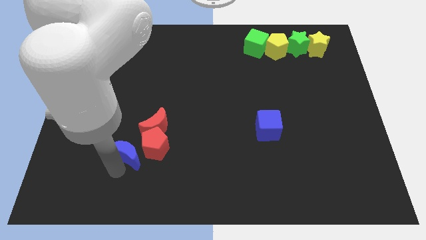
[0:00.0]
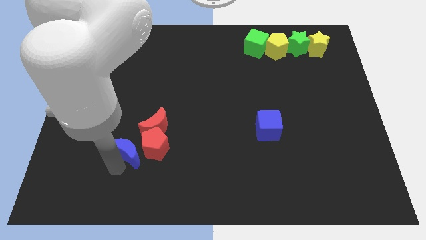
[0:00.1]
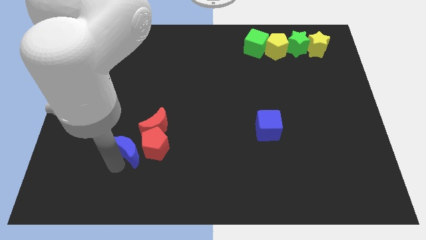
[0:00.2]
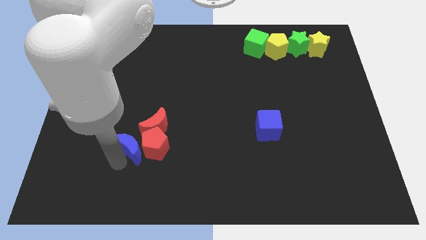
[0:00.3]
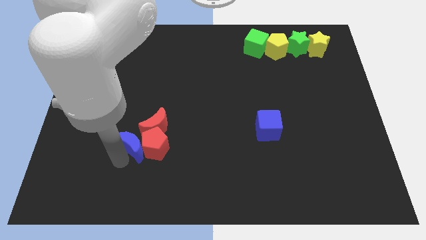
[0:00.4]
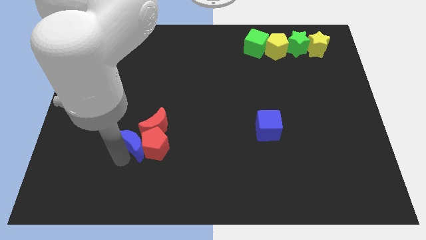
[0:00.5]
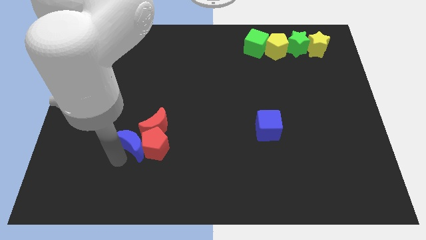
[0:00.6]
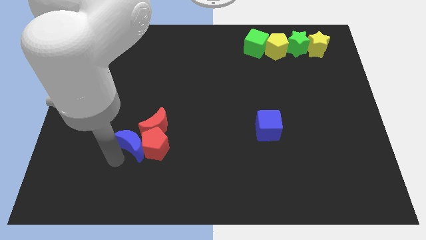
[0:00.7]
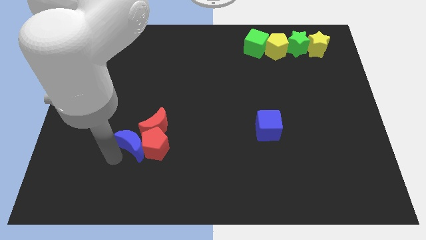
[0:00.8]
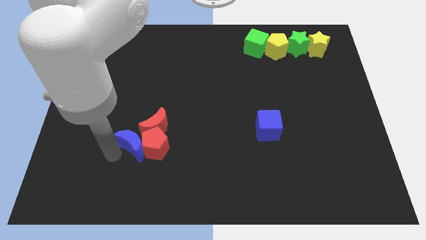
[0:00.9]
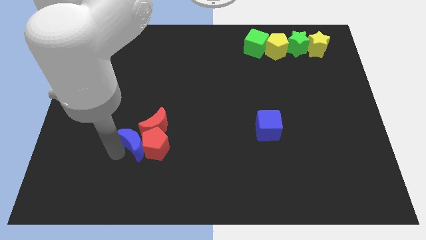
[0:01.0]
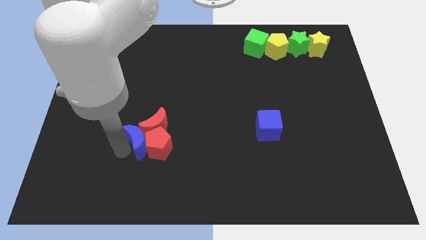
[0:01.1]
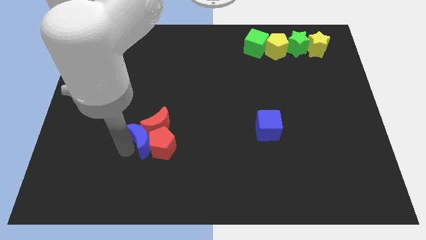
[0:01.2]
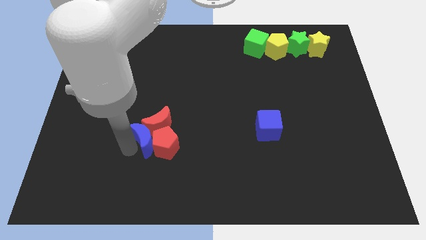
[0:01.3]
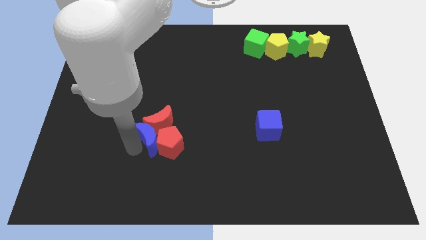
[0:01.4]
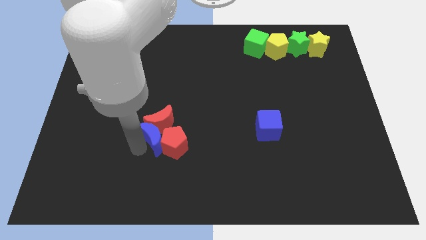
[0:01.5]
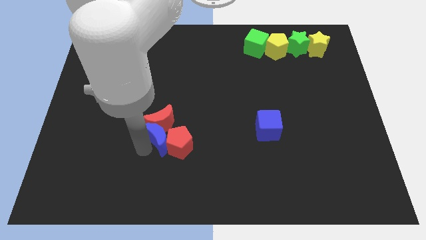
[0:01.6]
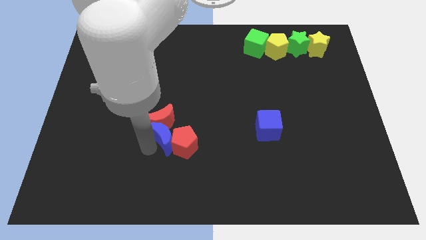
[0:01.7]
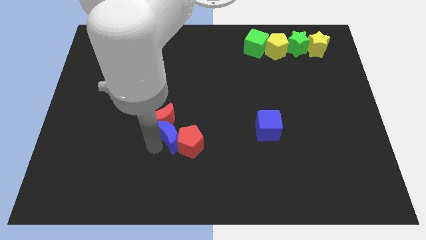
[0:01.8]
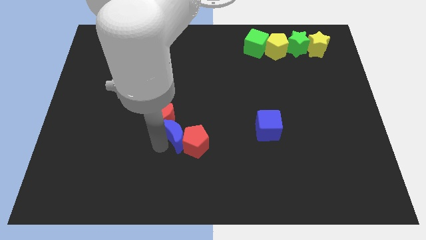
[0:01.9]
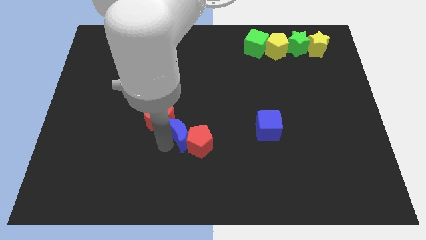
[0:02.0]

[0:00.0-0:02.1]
place blue moon to the bottom of red moon

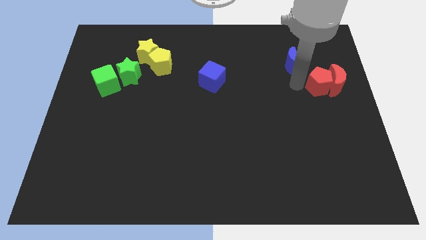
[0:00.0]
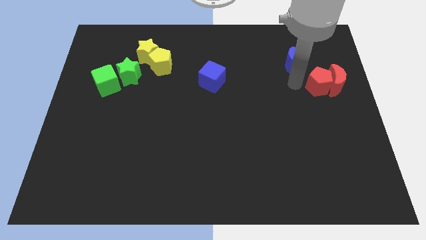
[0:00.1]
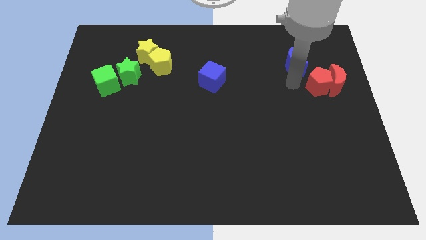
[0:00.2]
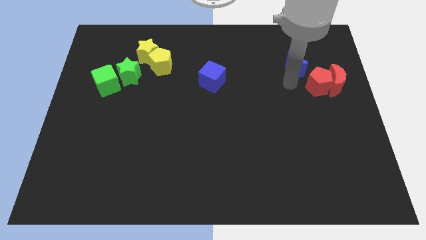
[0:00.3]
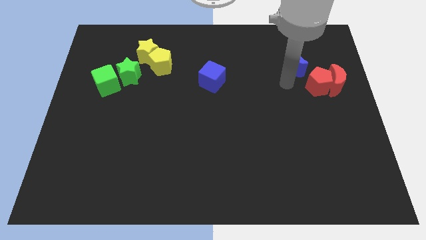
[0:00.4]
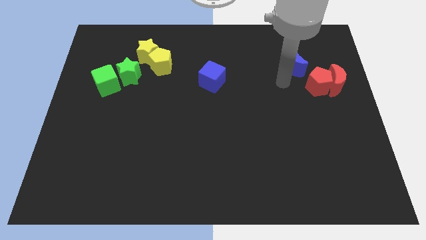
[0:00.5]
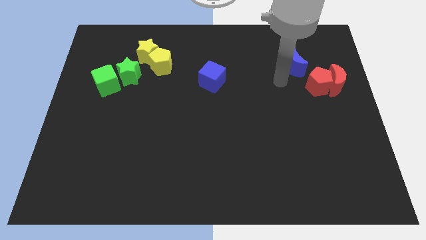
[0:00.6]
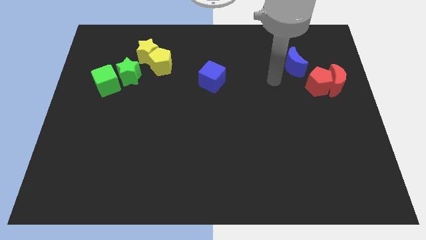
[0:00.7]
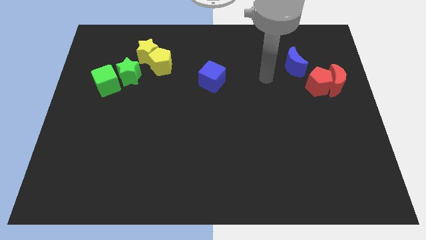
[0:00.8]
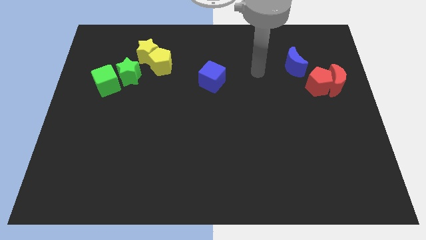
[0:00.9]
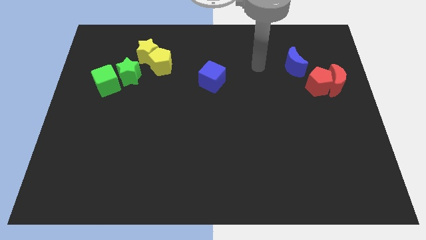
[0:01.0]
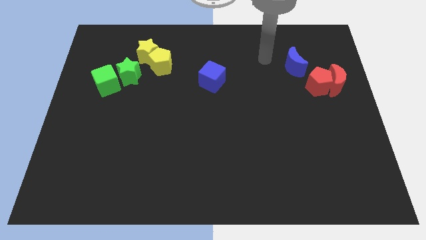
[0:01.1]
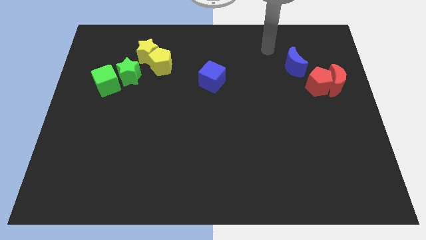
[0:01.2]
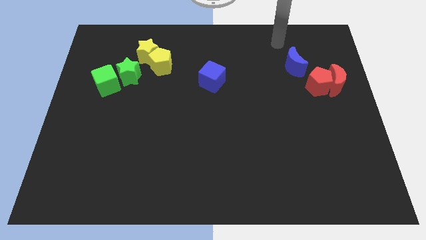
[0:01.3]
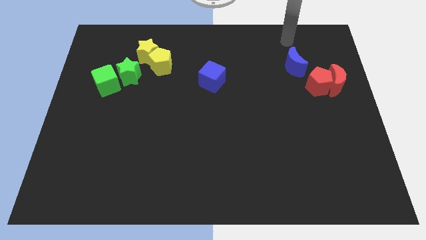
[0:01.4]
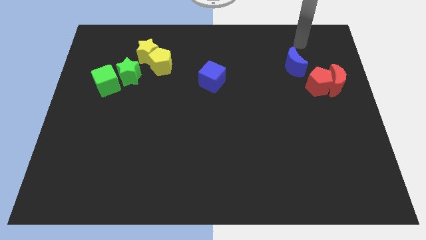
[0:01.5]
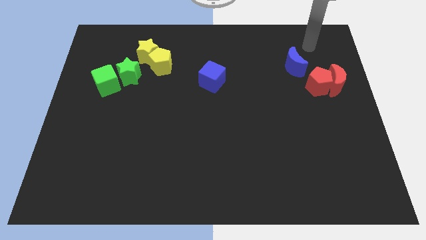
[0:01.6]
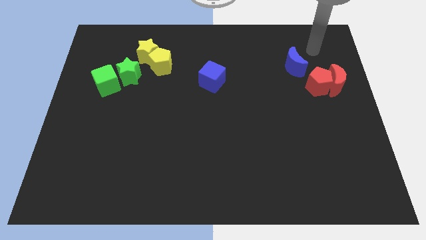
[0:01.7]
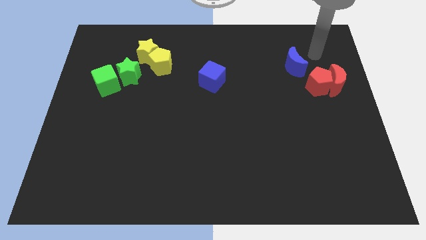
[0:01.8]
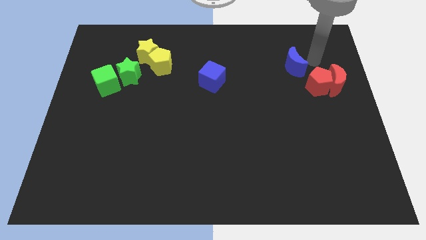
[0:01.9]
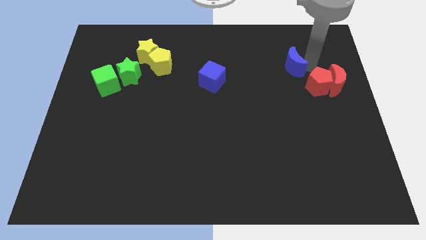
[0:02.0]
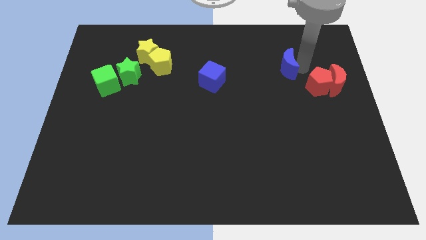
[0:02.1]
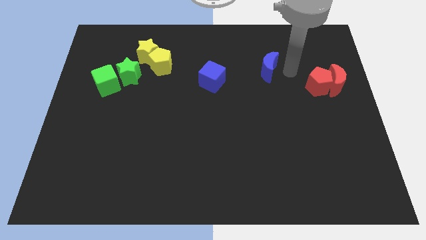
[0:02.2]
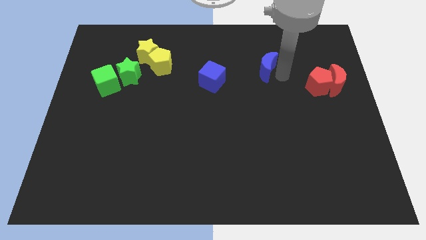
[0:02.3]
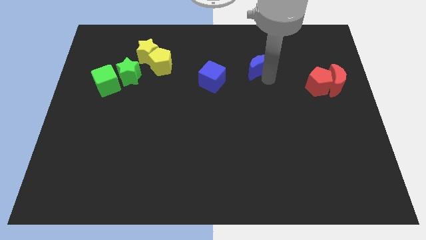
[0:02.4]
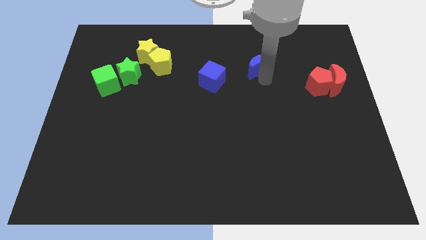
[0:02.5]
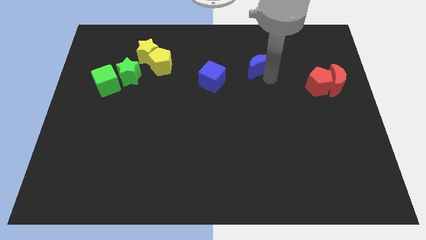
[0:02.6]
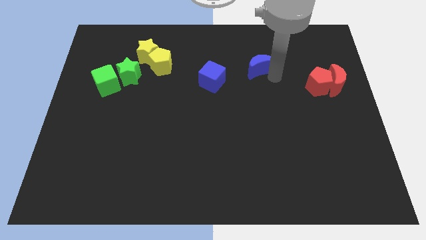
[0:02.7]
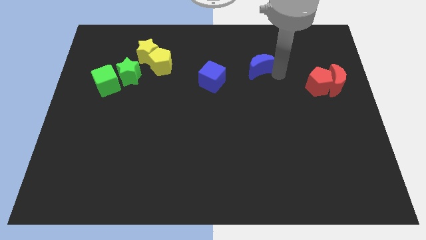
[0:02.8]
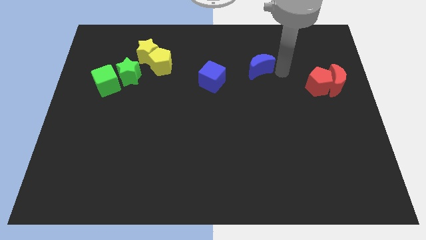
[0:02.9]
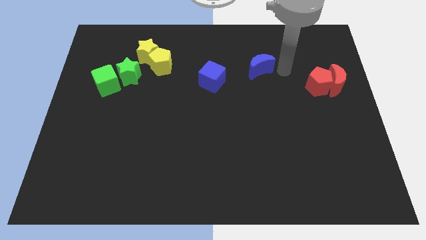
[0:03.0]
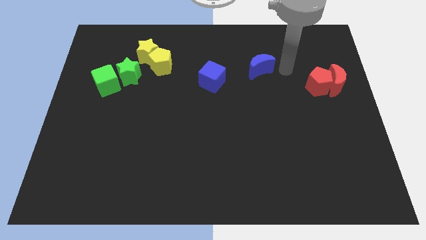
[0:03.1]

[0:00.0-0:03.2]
move the blue crescent towards the blue cube

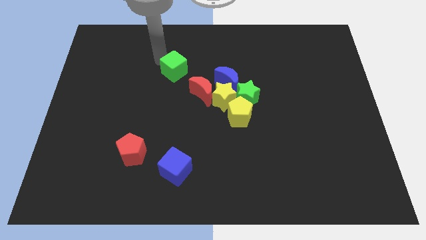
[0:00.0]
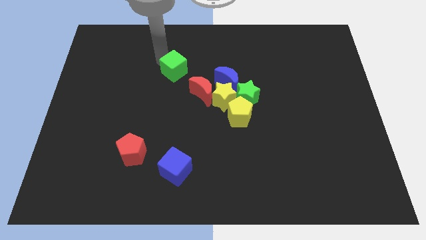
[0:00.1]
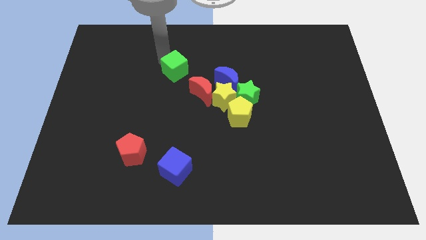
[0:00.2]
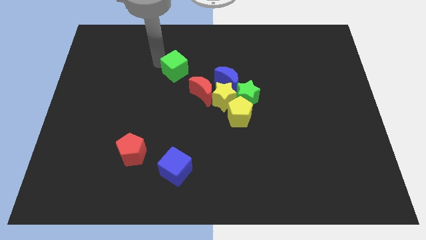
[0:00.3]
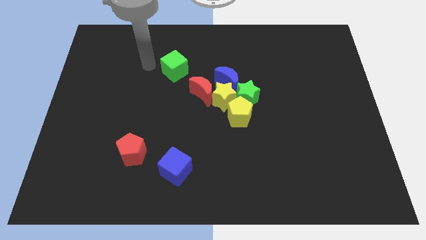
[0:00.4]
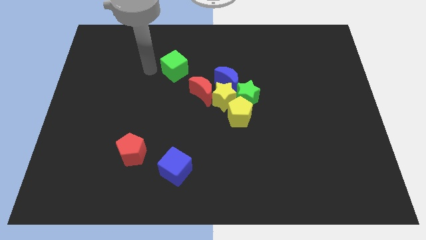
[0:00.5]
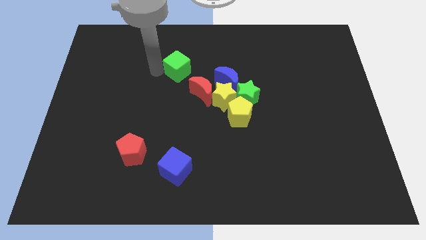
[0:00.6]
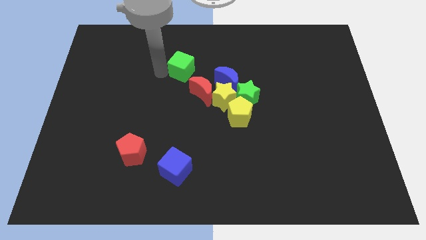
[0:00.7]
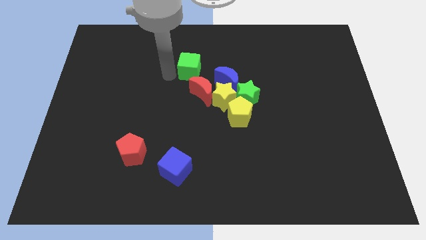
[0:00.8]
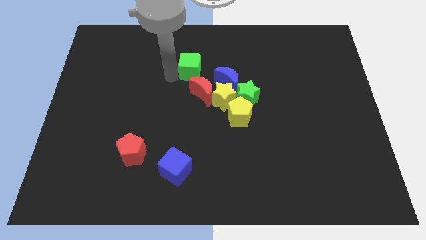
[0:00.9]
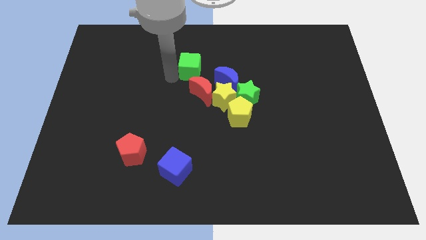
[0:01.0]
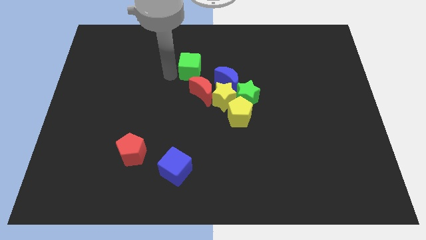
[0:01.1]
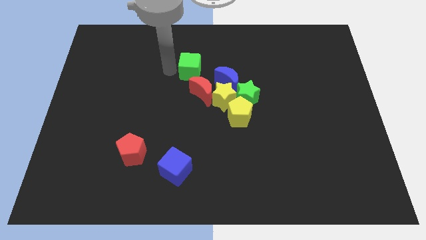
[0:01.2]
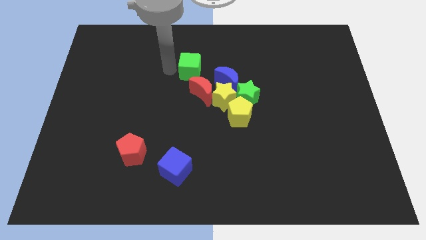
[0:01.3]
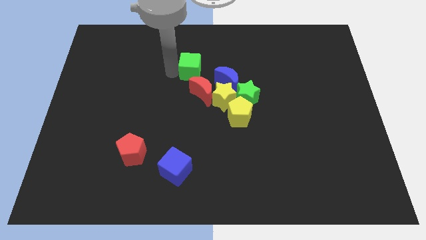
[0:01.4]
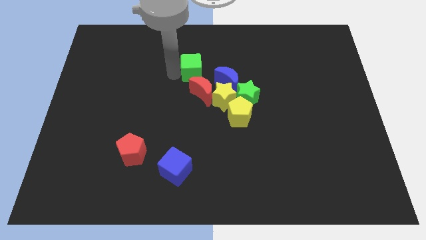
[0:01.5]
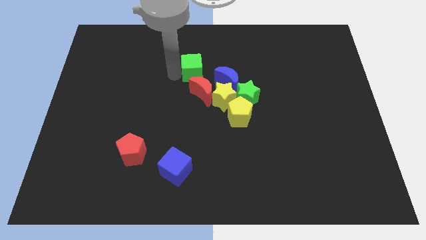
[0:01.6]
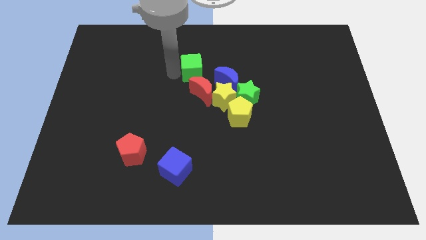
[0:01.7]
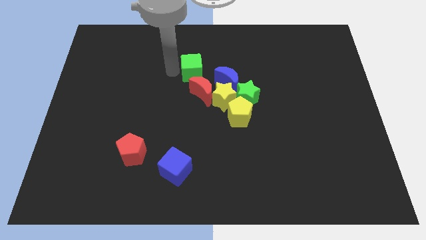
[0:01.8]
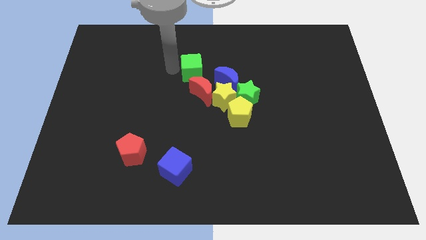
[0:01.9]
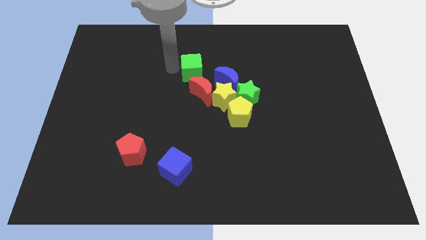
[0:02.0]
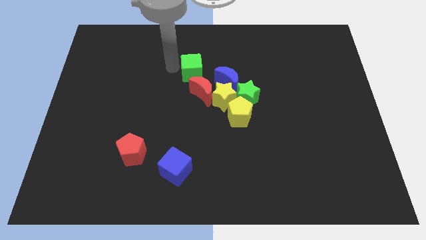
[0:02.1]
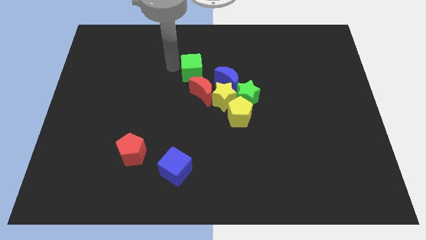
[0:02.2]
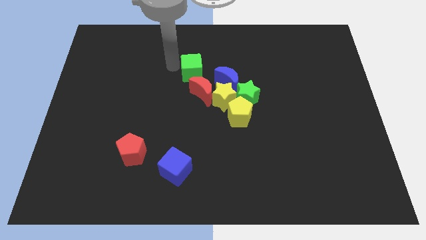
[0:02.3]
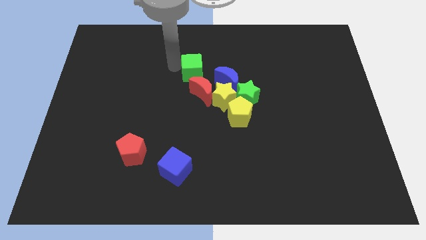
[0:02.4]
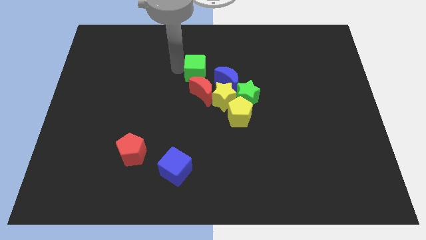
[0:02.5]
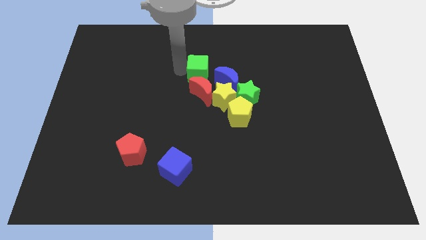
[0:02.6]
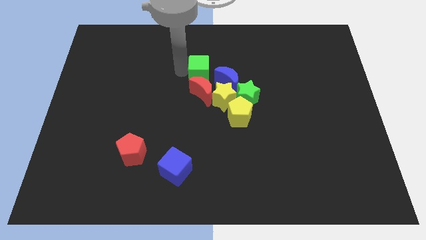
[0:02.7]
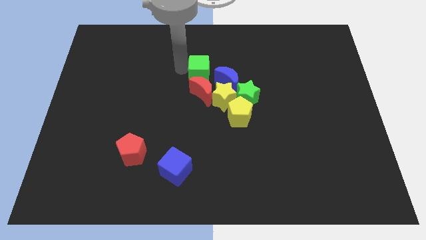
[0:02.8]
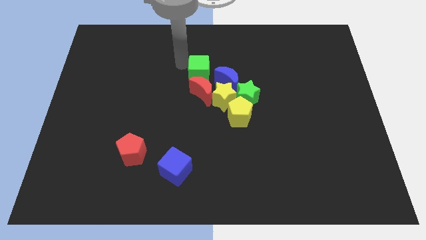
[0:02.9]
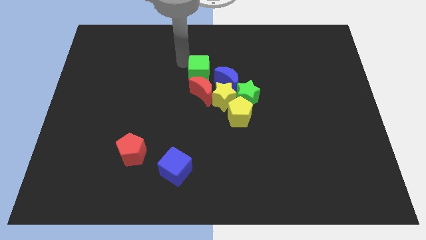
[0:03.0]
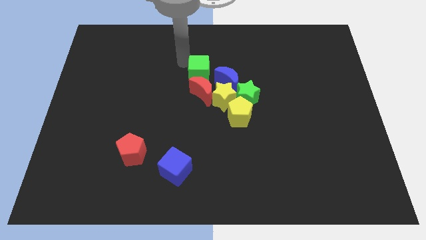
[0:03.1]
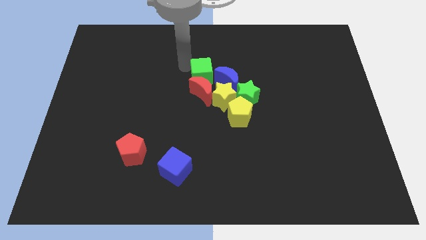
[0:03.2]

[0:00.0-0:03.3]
slide green cube in between the blue moon and the red moon

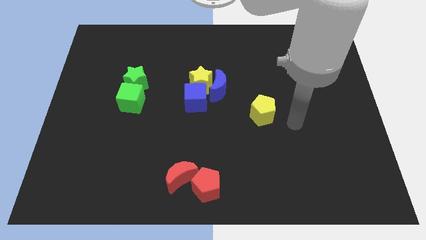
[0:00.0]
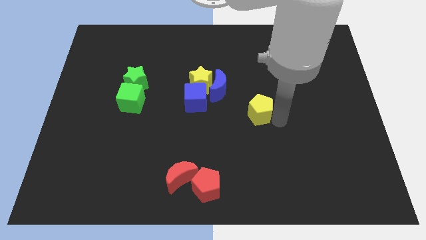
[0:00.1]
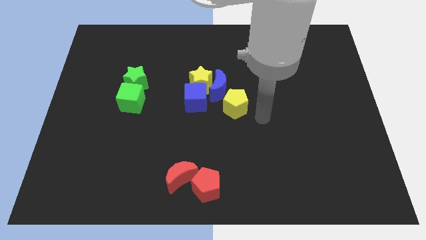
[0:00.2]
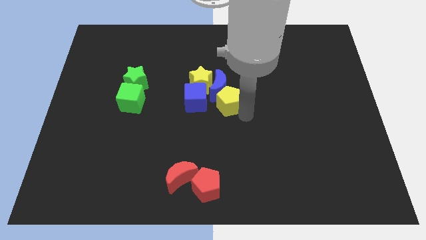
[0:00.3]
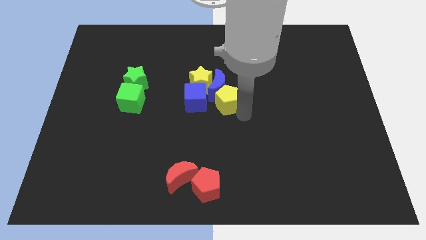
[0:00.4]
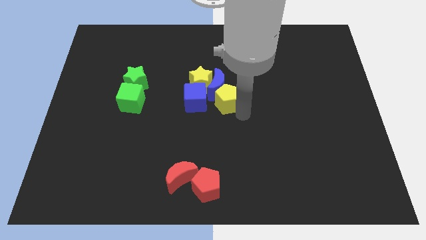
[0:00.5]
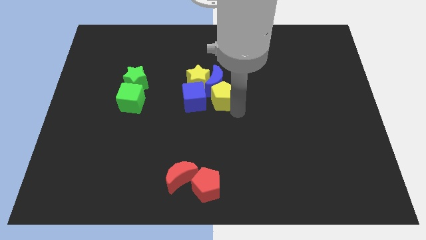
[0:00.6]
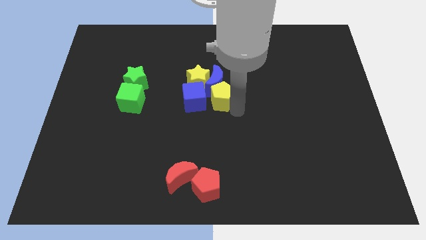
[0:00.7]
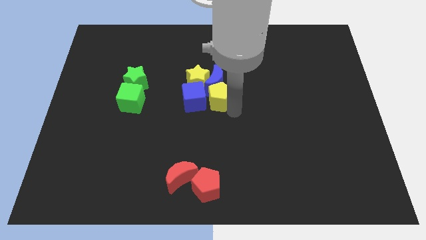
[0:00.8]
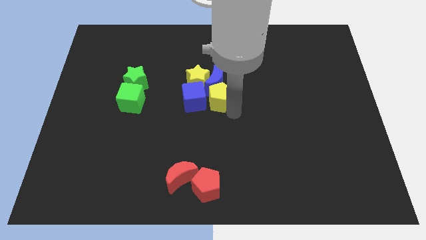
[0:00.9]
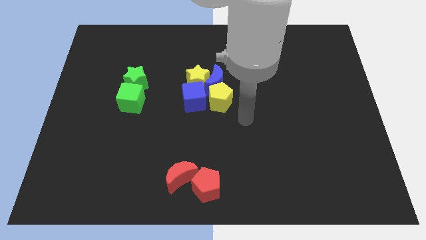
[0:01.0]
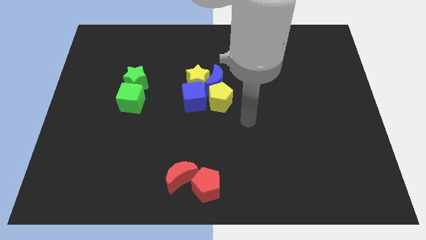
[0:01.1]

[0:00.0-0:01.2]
push the yellow pentagon into the blue crescent
